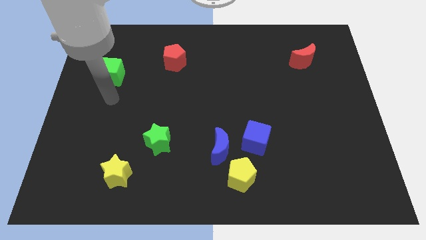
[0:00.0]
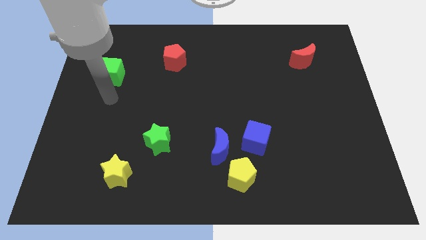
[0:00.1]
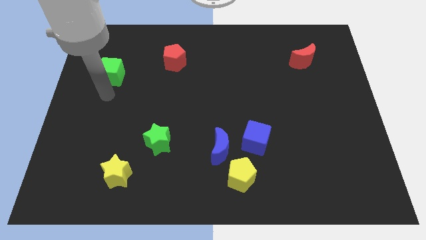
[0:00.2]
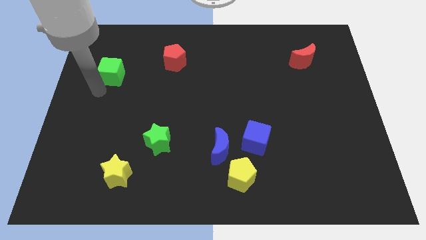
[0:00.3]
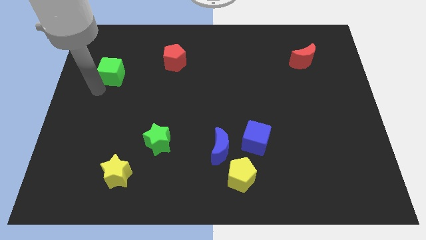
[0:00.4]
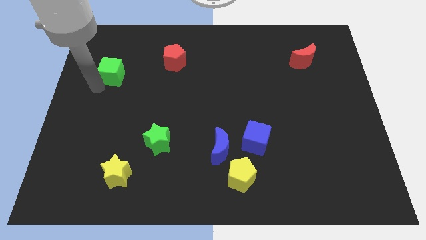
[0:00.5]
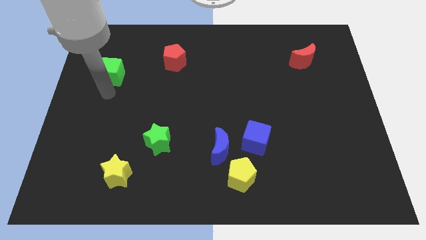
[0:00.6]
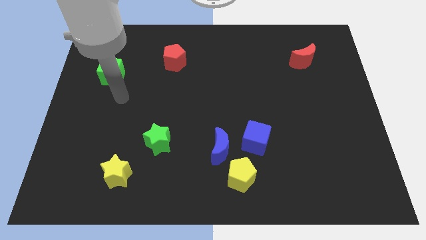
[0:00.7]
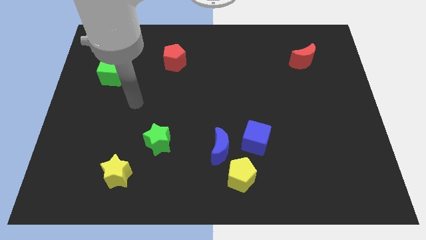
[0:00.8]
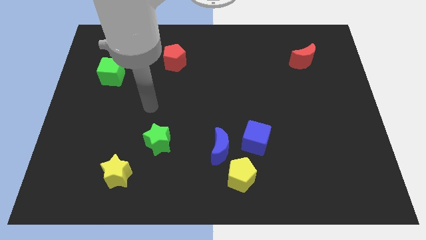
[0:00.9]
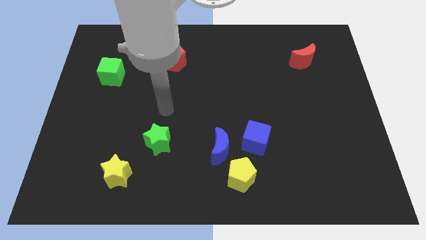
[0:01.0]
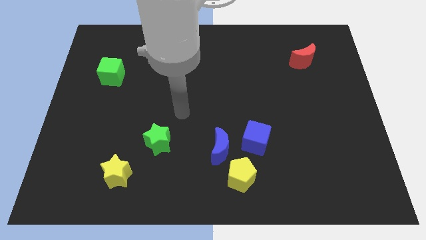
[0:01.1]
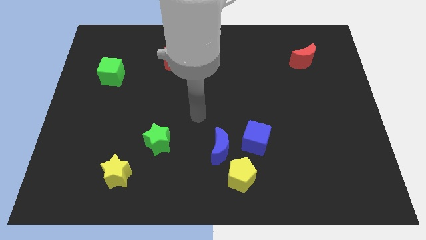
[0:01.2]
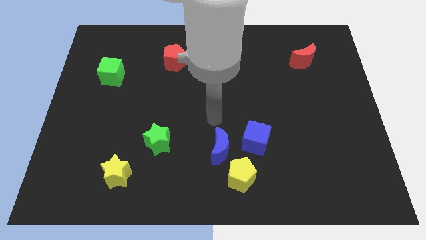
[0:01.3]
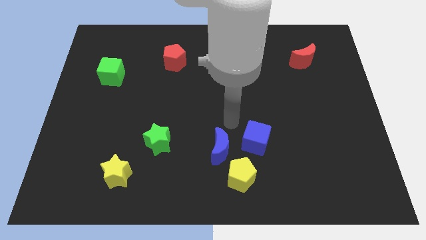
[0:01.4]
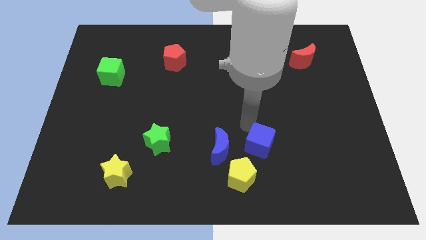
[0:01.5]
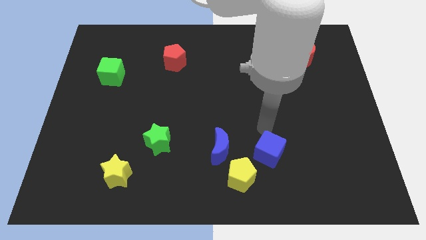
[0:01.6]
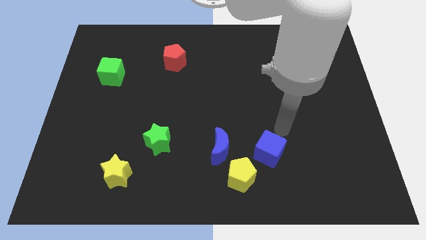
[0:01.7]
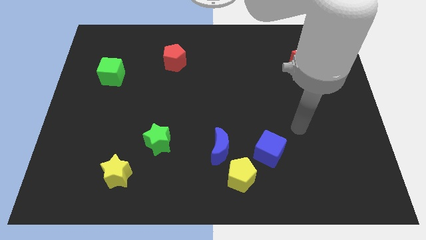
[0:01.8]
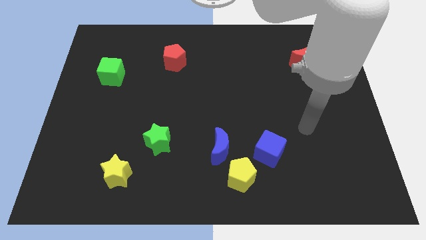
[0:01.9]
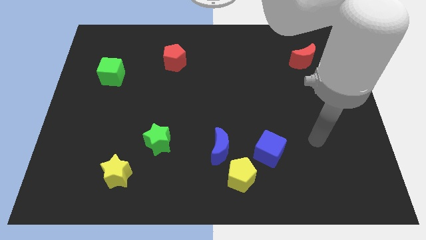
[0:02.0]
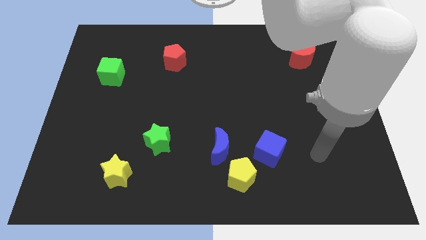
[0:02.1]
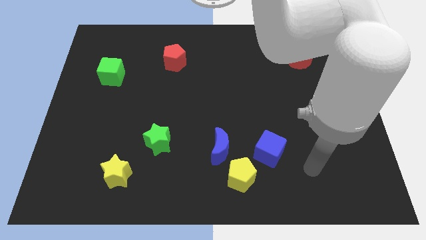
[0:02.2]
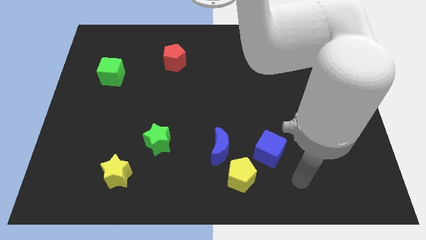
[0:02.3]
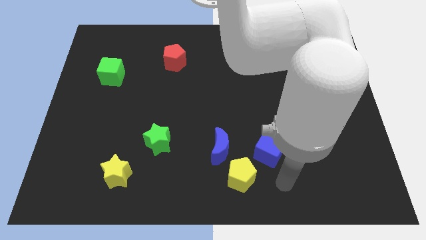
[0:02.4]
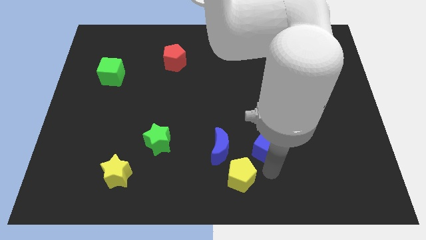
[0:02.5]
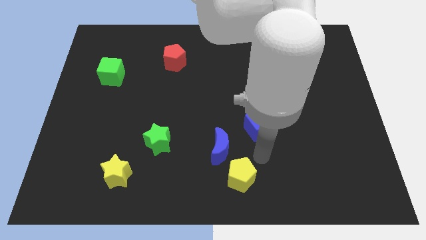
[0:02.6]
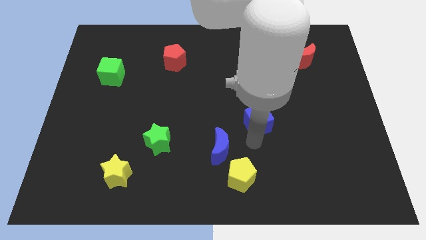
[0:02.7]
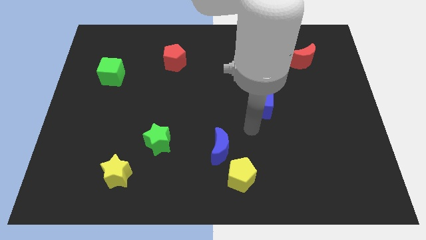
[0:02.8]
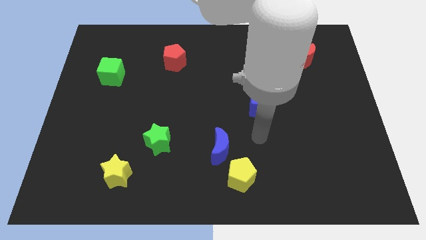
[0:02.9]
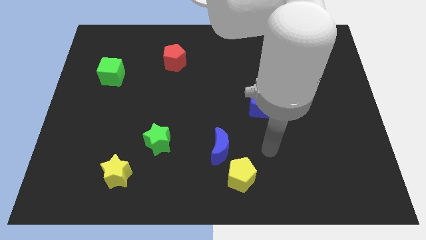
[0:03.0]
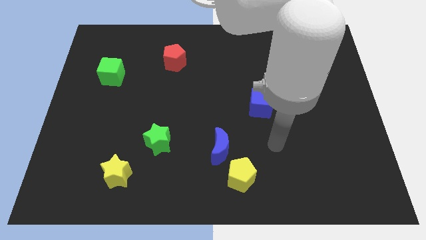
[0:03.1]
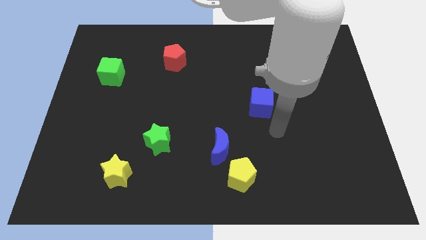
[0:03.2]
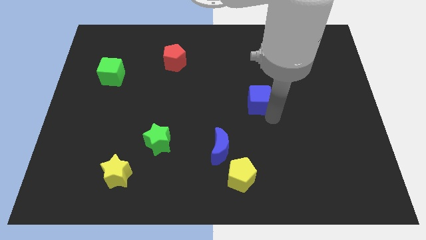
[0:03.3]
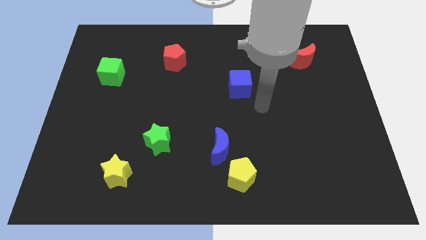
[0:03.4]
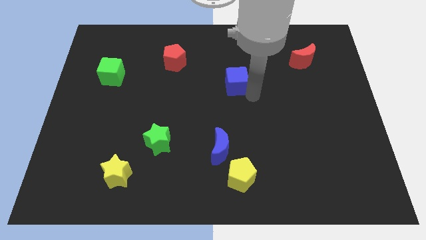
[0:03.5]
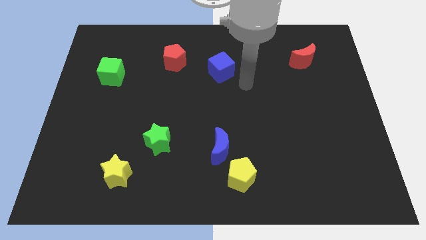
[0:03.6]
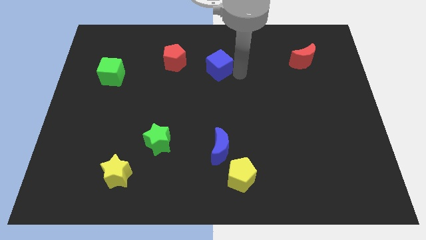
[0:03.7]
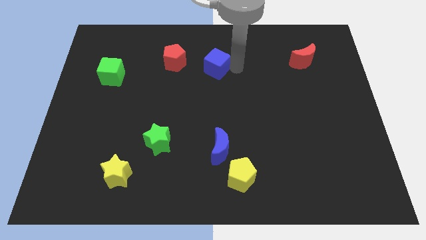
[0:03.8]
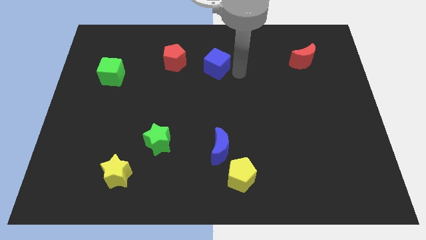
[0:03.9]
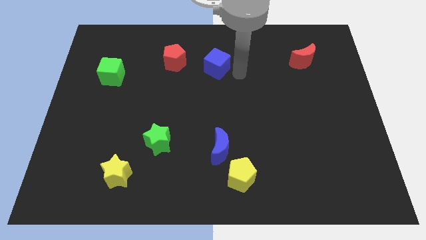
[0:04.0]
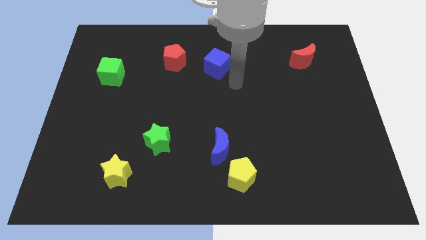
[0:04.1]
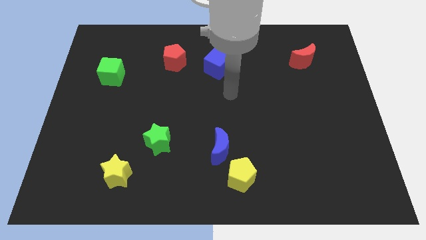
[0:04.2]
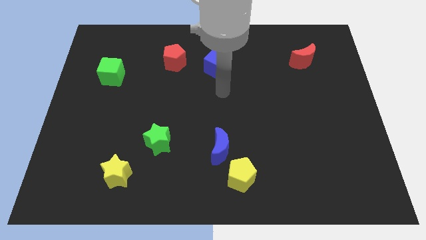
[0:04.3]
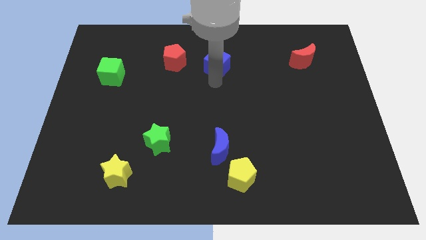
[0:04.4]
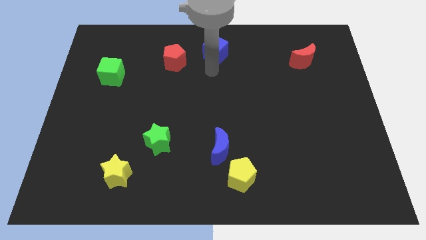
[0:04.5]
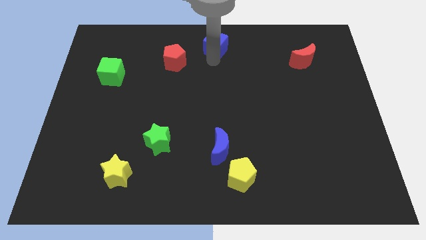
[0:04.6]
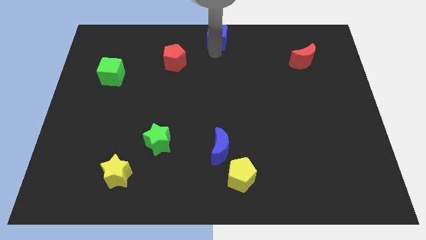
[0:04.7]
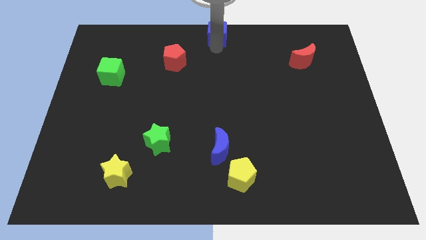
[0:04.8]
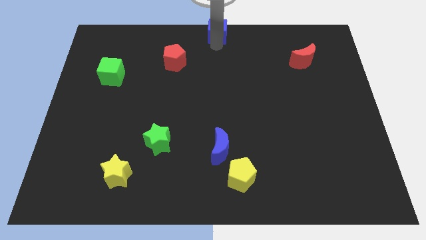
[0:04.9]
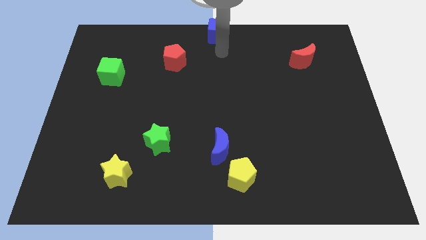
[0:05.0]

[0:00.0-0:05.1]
put the blue cube at the top center of the board

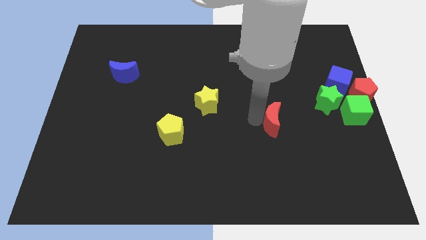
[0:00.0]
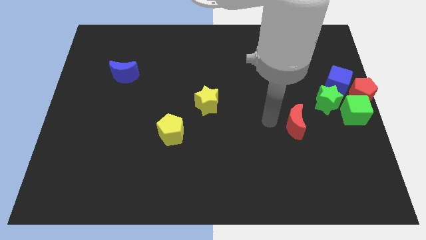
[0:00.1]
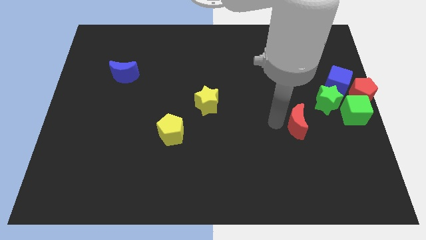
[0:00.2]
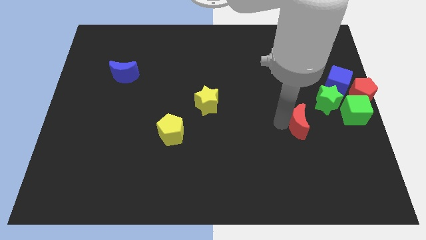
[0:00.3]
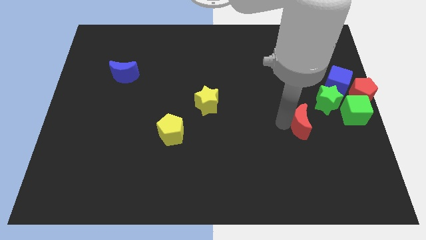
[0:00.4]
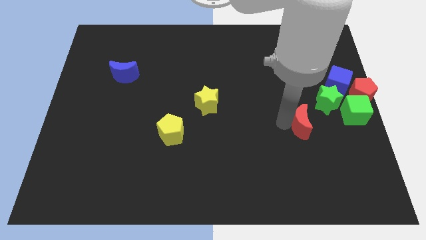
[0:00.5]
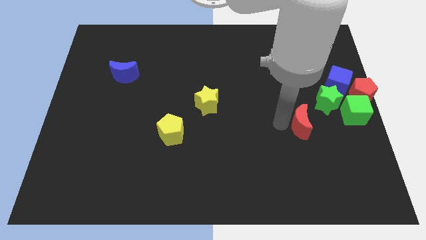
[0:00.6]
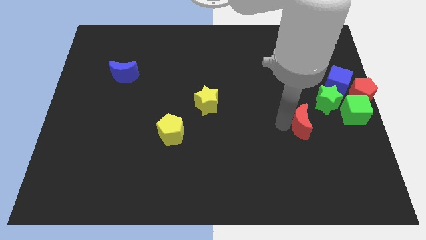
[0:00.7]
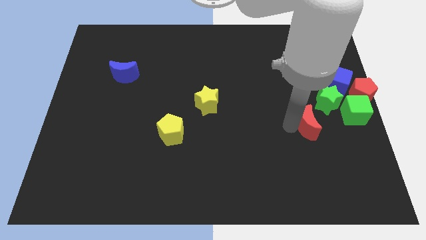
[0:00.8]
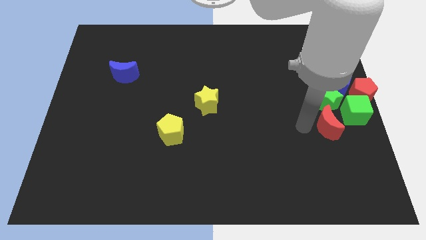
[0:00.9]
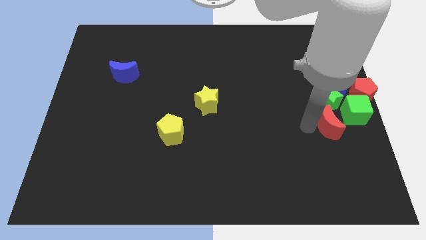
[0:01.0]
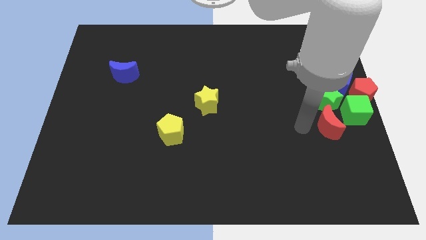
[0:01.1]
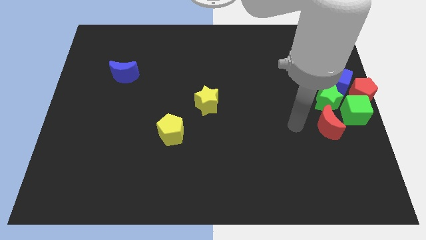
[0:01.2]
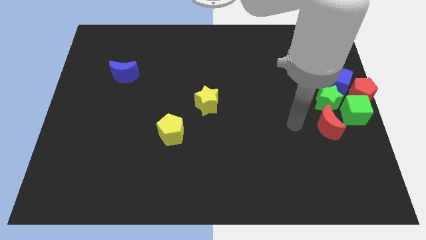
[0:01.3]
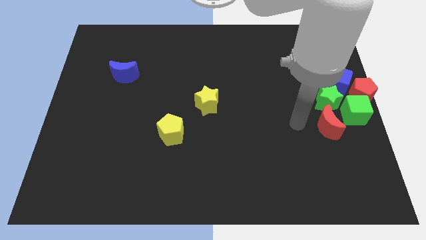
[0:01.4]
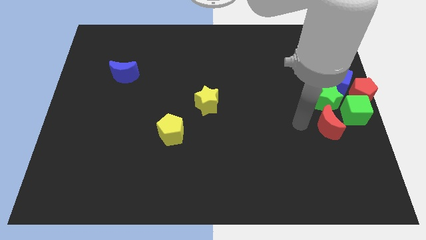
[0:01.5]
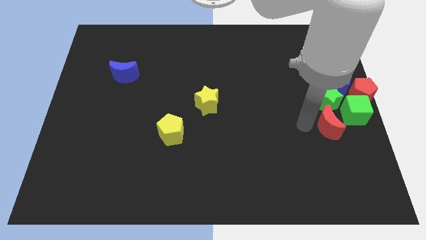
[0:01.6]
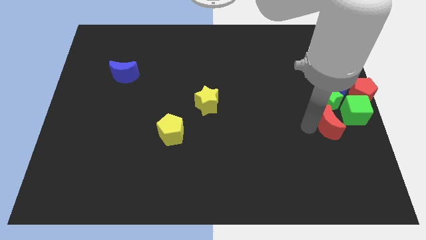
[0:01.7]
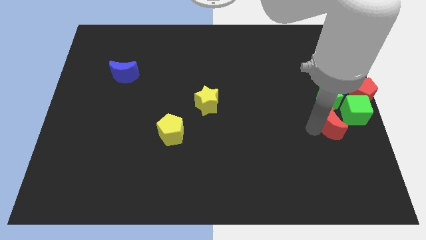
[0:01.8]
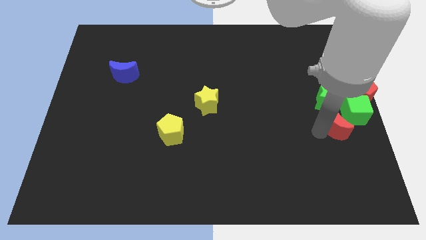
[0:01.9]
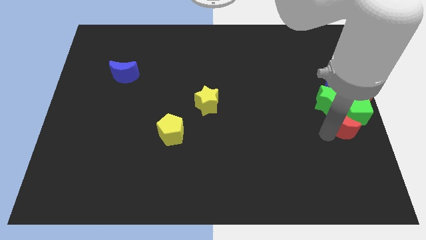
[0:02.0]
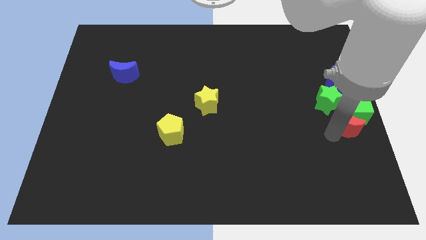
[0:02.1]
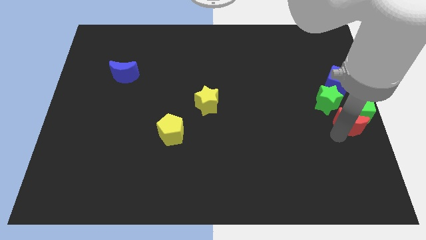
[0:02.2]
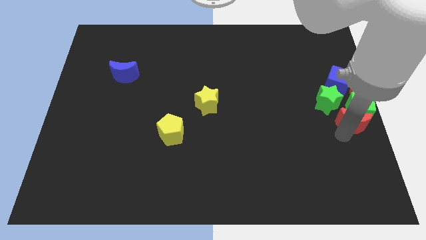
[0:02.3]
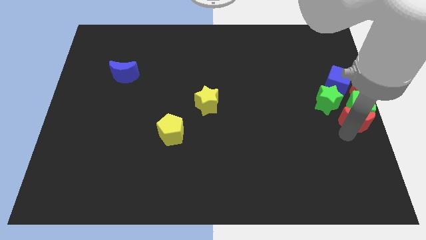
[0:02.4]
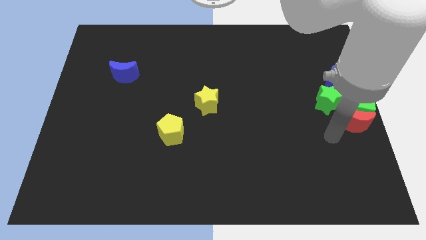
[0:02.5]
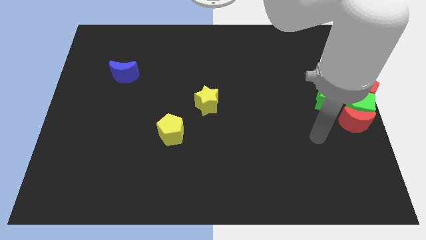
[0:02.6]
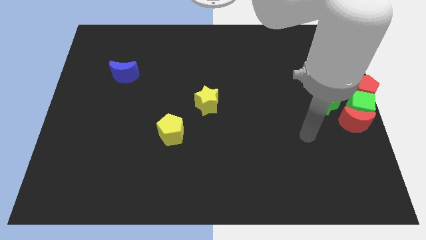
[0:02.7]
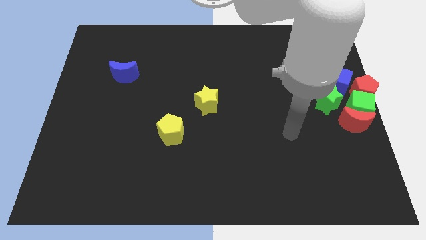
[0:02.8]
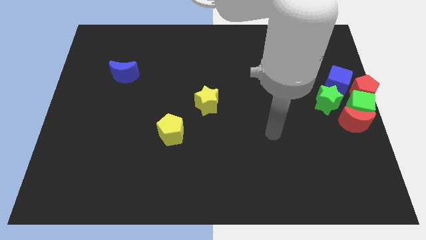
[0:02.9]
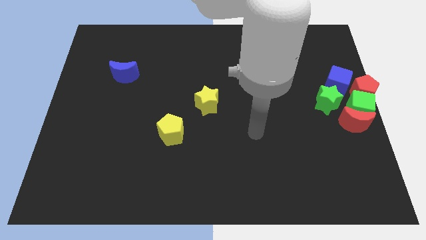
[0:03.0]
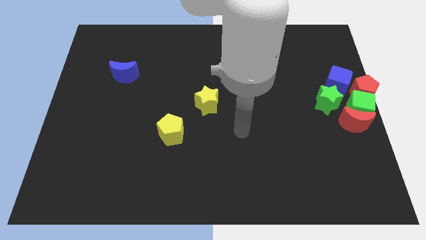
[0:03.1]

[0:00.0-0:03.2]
push the red moon into the green cube

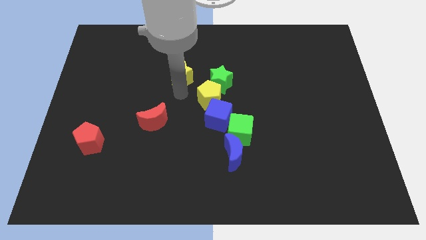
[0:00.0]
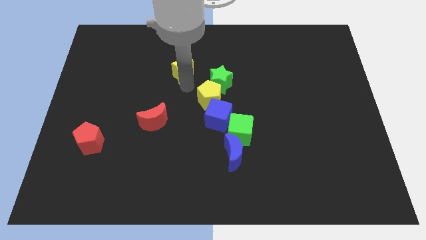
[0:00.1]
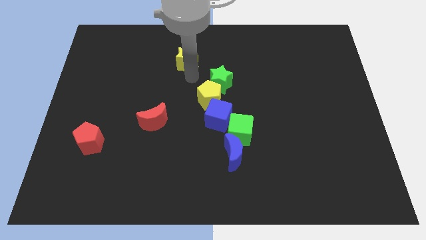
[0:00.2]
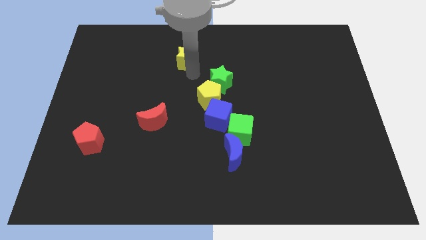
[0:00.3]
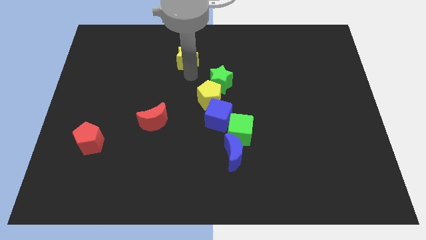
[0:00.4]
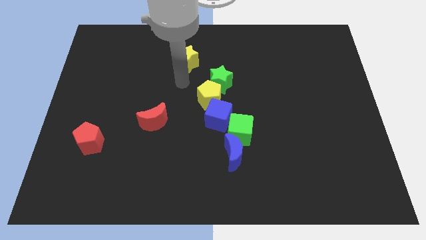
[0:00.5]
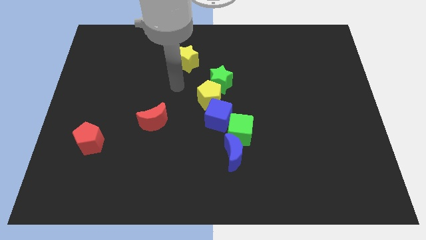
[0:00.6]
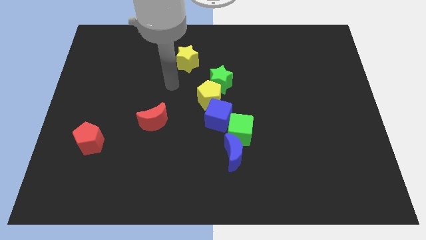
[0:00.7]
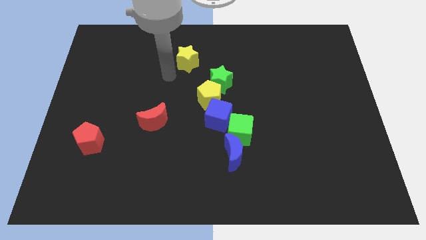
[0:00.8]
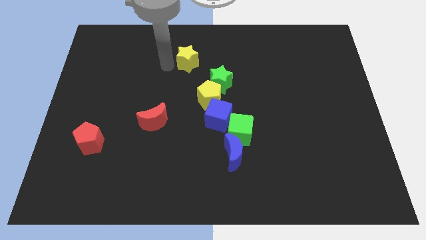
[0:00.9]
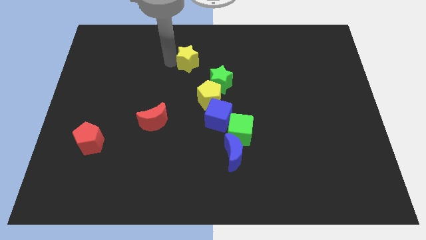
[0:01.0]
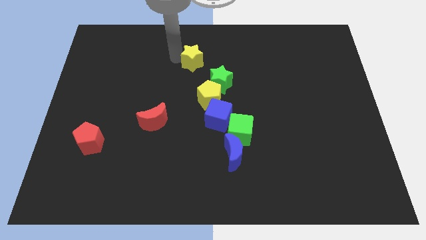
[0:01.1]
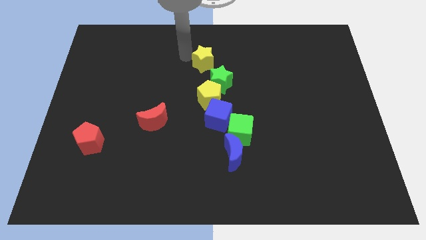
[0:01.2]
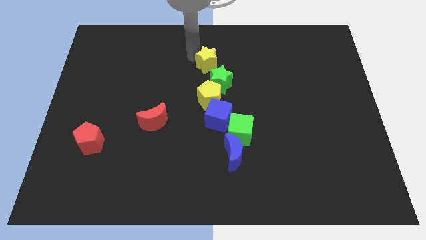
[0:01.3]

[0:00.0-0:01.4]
push the yellow star close to the green star
